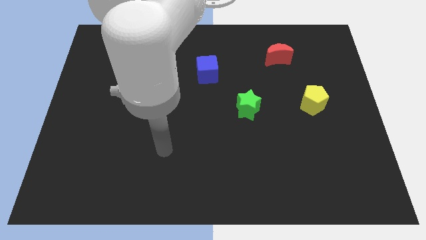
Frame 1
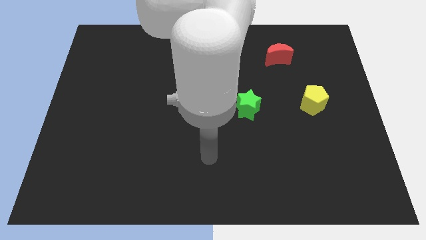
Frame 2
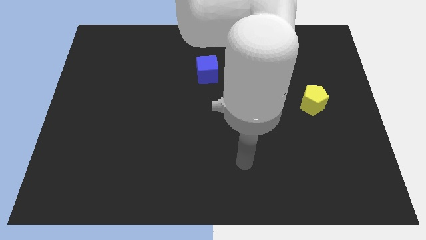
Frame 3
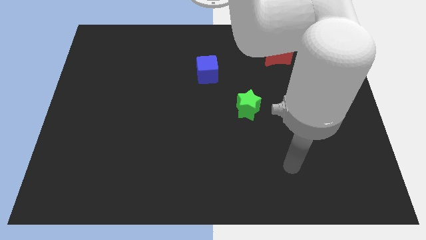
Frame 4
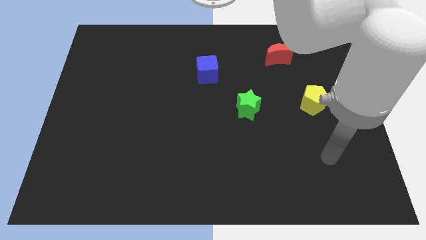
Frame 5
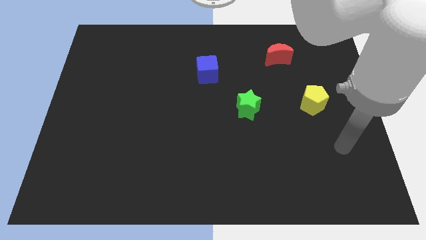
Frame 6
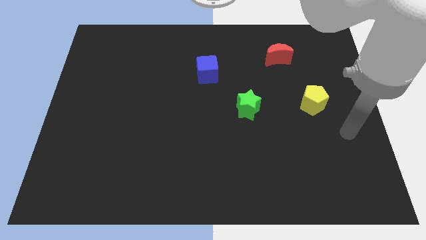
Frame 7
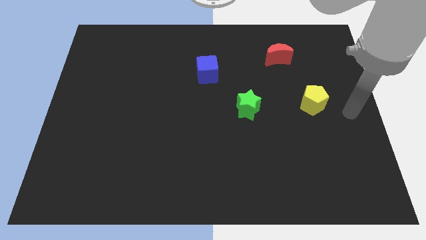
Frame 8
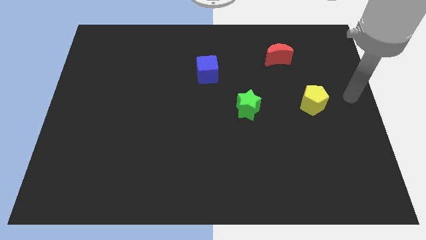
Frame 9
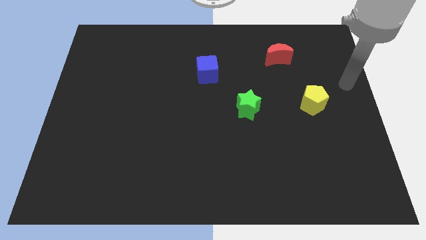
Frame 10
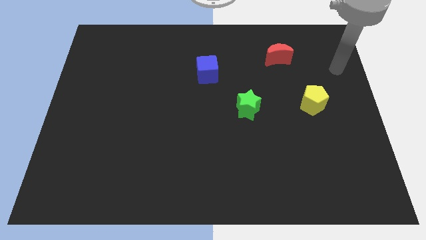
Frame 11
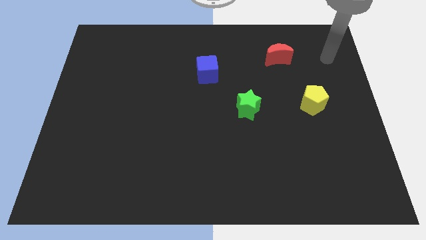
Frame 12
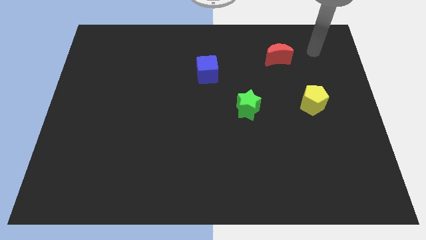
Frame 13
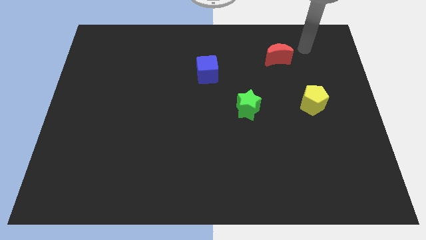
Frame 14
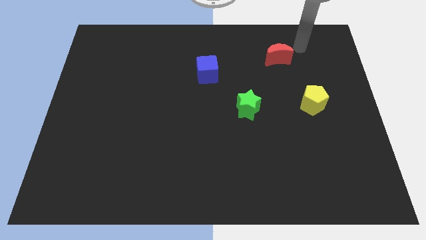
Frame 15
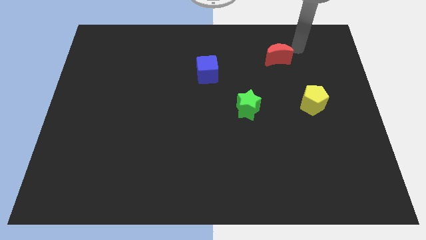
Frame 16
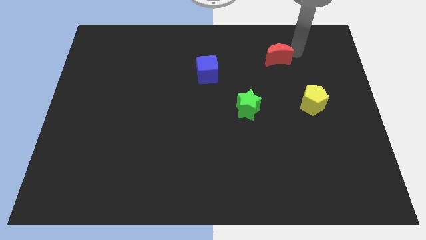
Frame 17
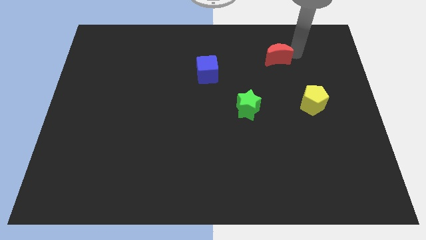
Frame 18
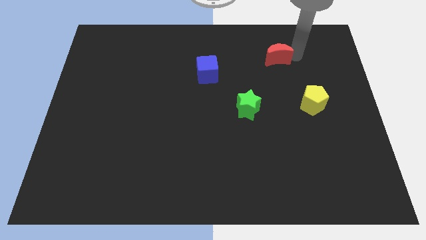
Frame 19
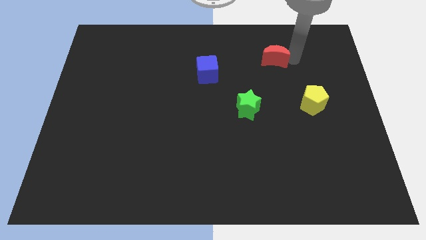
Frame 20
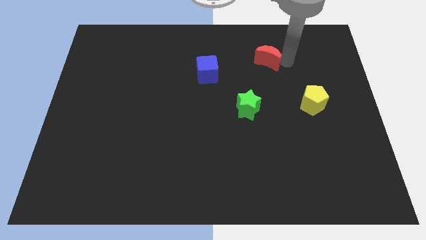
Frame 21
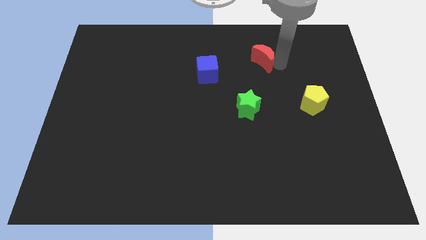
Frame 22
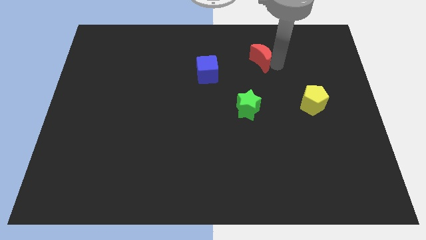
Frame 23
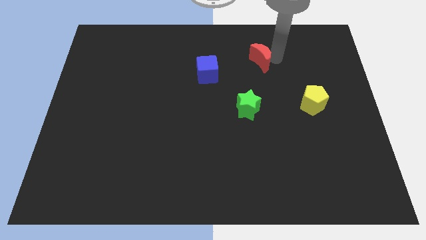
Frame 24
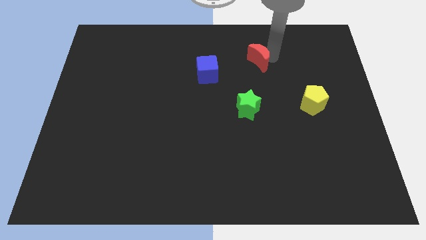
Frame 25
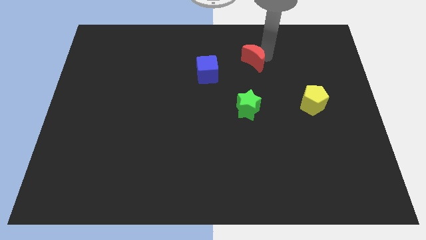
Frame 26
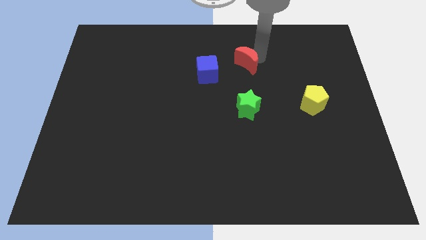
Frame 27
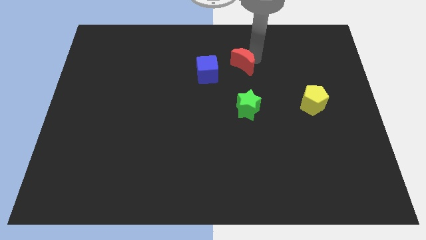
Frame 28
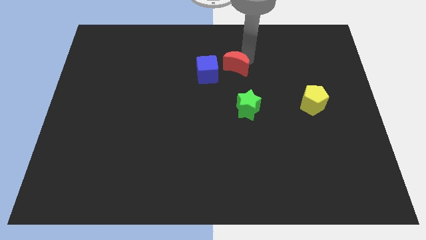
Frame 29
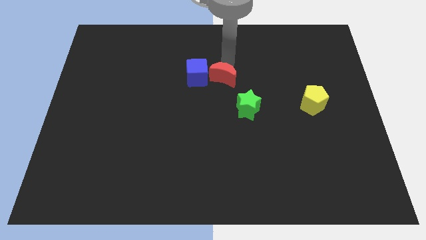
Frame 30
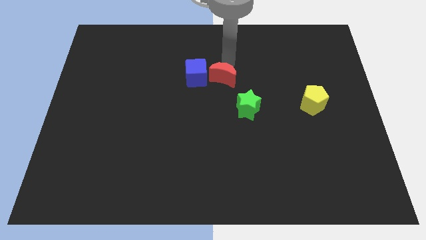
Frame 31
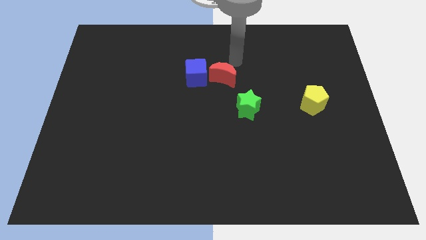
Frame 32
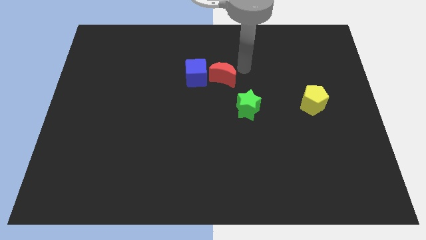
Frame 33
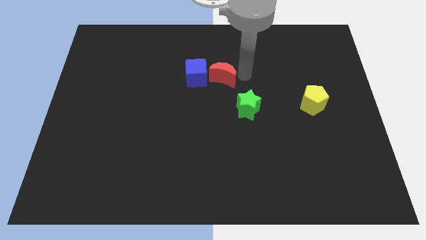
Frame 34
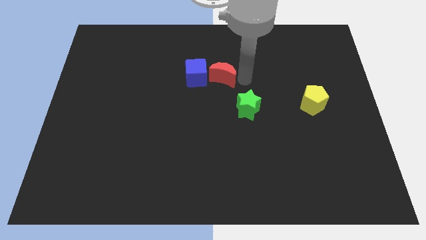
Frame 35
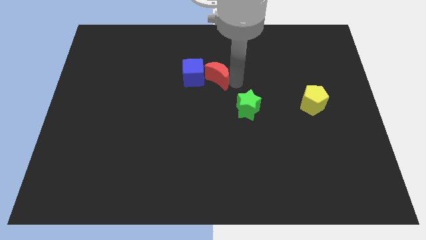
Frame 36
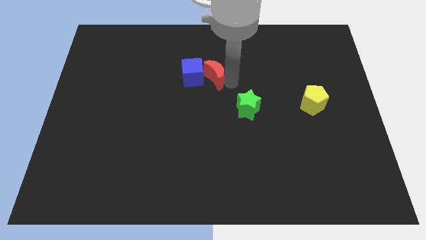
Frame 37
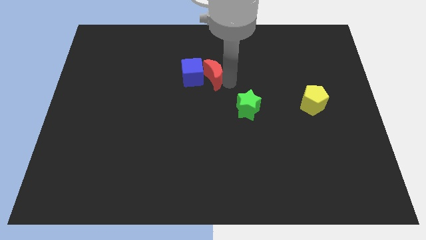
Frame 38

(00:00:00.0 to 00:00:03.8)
put the moon towards the blue cube

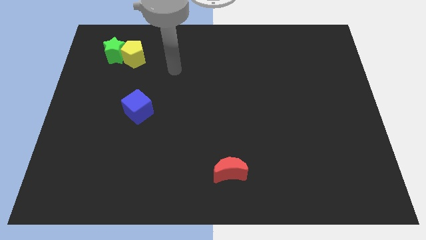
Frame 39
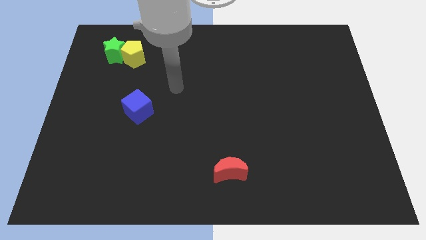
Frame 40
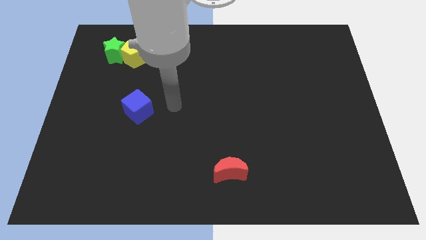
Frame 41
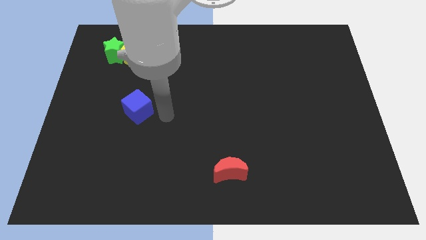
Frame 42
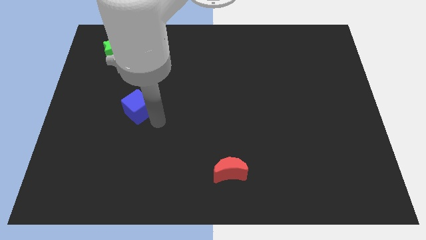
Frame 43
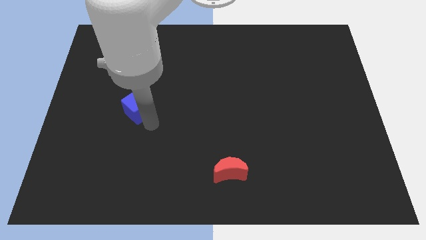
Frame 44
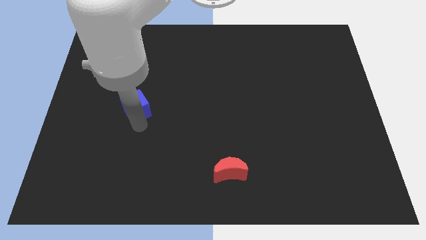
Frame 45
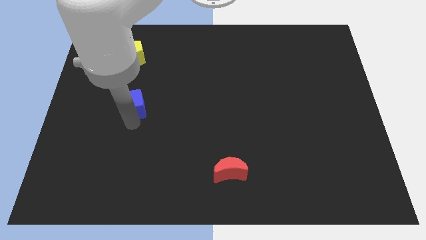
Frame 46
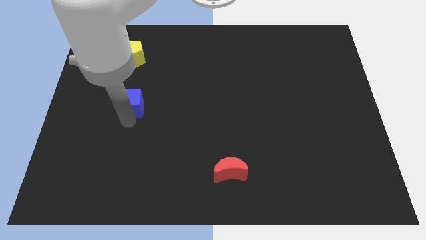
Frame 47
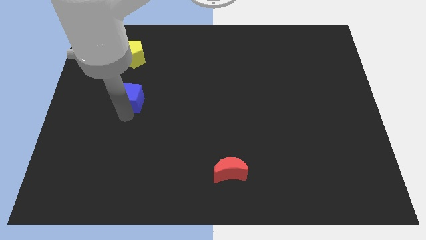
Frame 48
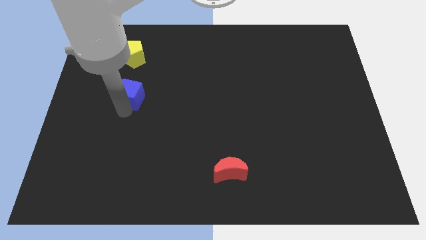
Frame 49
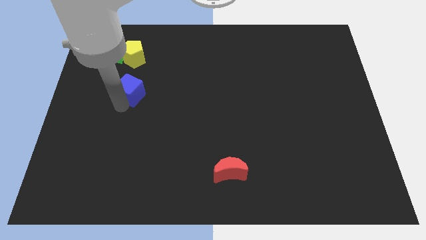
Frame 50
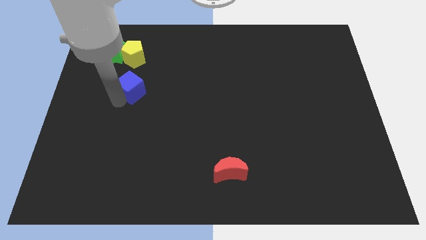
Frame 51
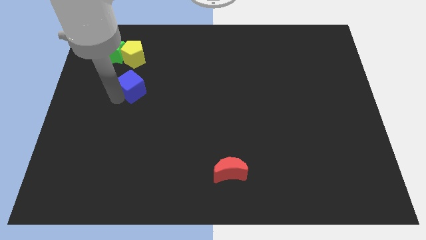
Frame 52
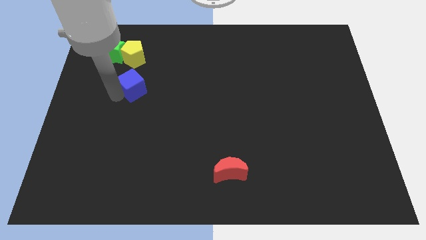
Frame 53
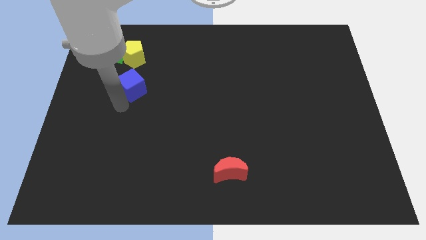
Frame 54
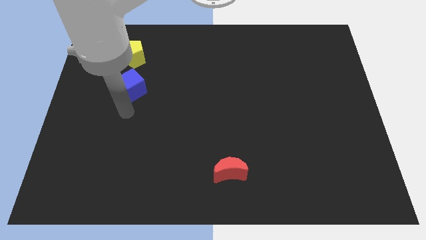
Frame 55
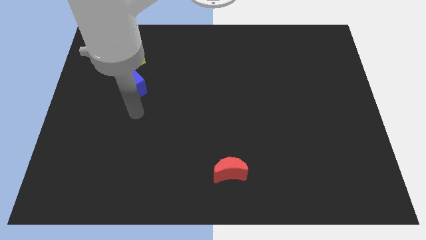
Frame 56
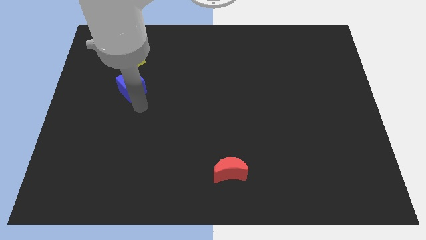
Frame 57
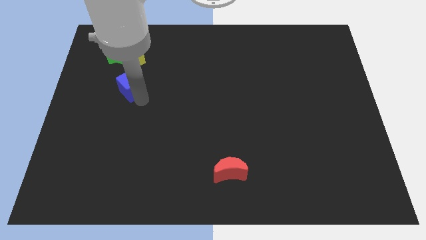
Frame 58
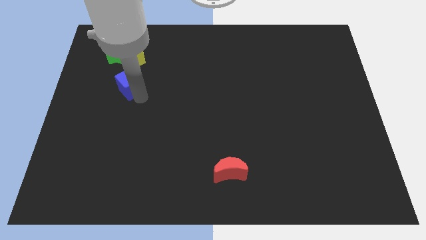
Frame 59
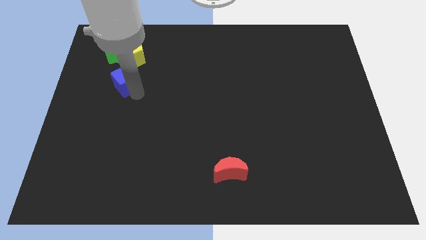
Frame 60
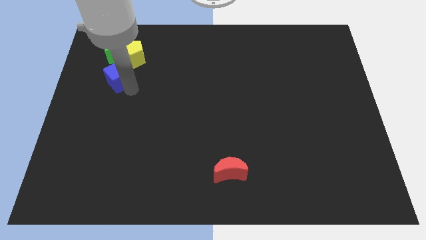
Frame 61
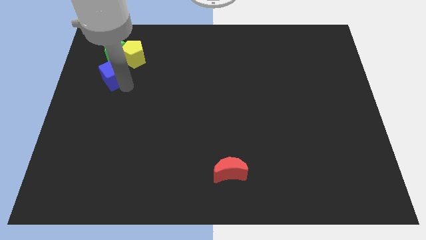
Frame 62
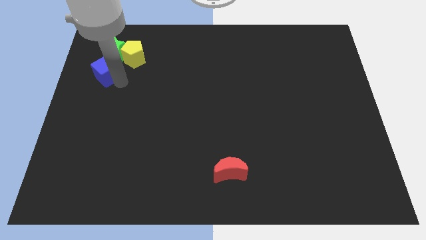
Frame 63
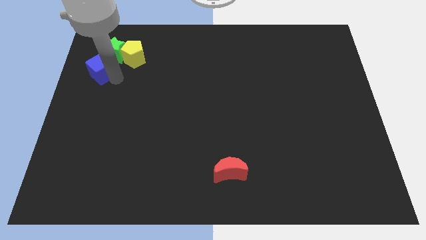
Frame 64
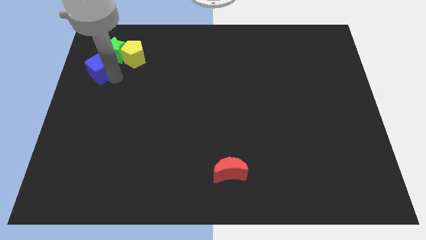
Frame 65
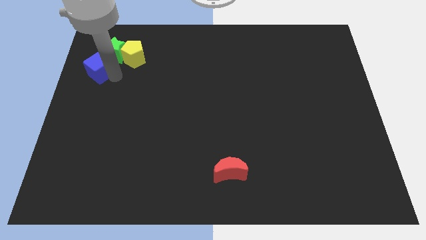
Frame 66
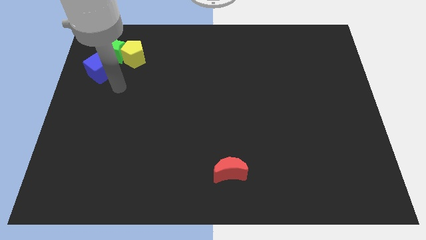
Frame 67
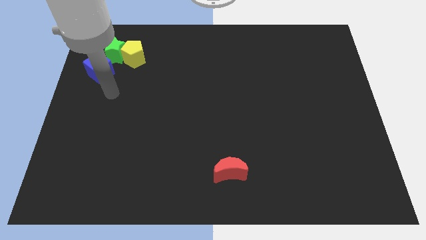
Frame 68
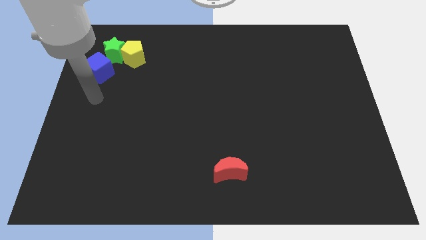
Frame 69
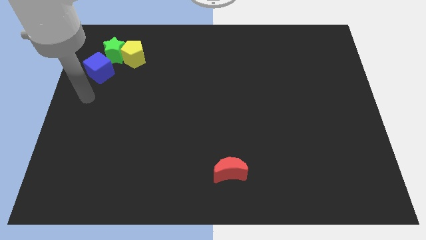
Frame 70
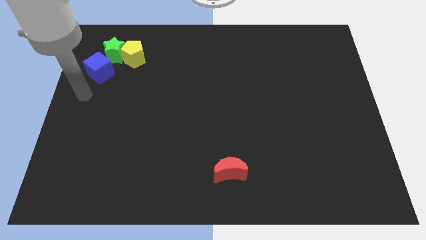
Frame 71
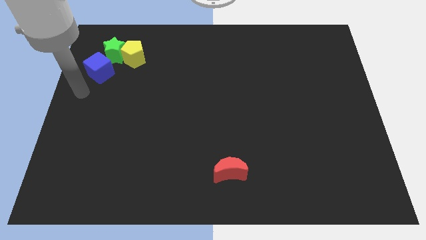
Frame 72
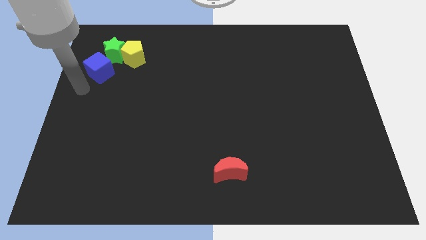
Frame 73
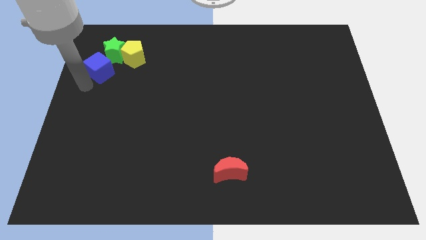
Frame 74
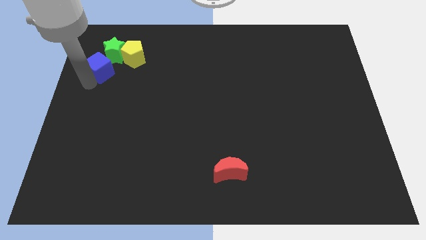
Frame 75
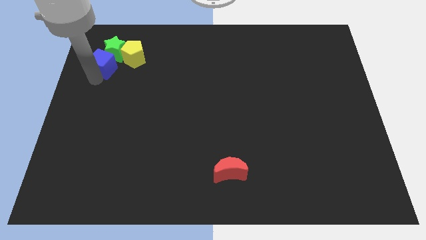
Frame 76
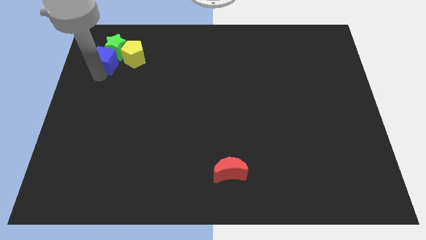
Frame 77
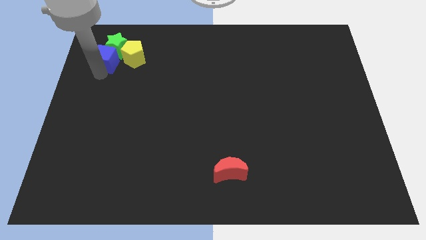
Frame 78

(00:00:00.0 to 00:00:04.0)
push the blue block to the green star

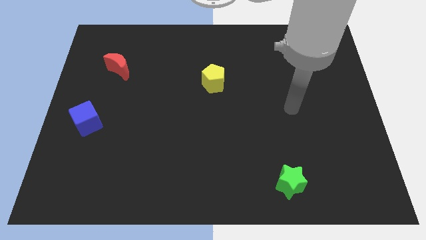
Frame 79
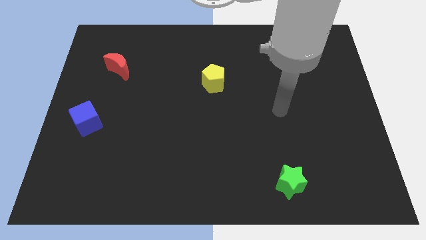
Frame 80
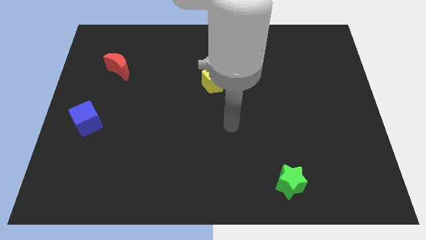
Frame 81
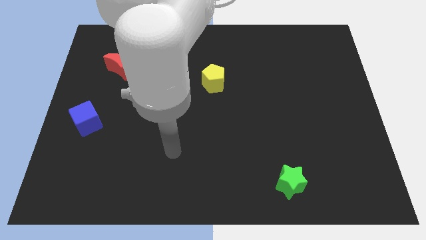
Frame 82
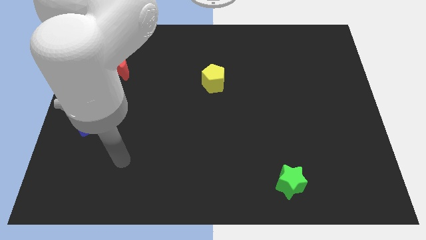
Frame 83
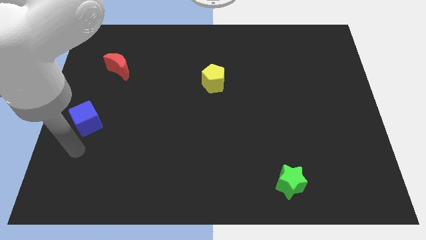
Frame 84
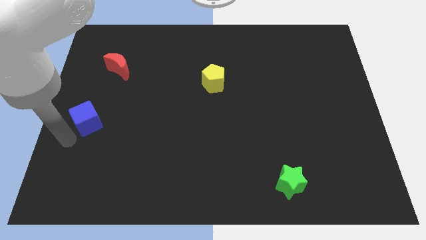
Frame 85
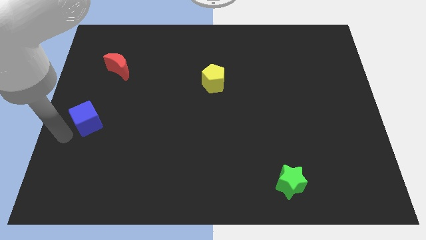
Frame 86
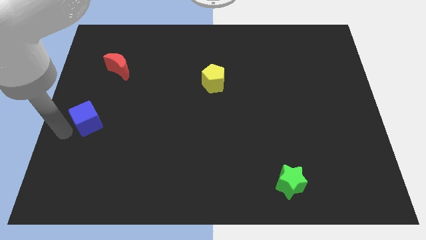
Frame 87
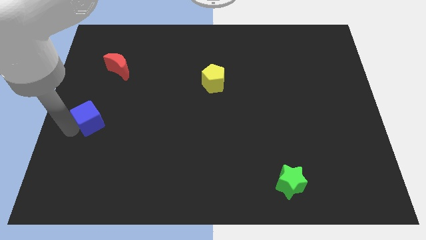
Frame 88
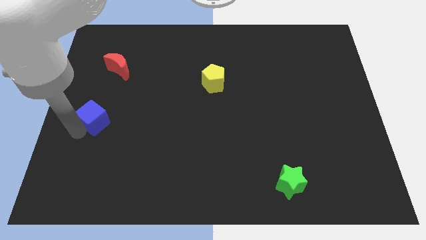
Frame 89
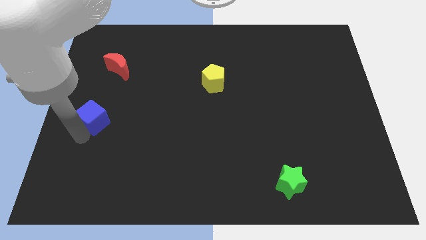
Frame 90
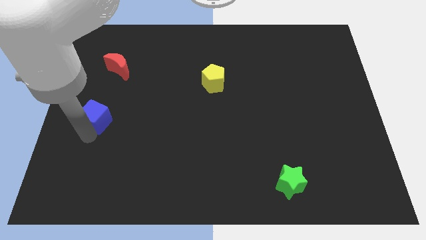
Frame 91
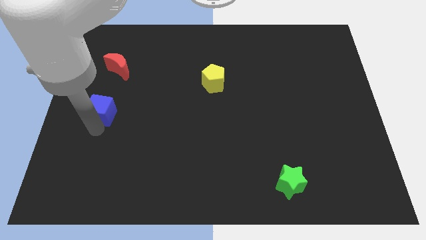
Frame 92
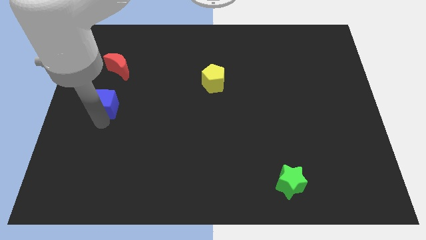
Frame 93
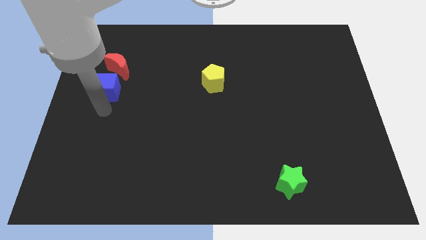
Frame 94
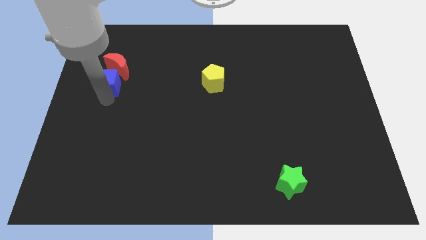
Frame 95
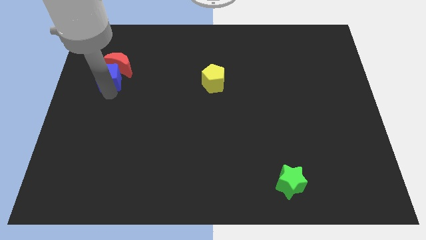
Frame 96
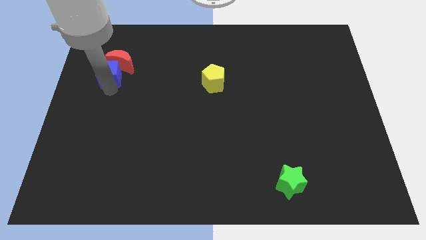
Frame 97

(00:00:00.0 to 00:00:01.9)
put the blue cube close to the red moon
